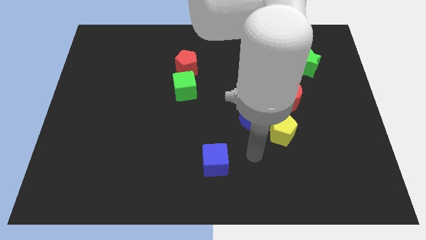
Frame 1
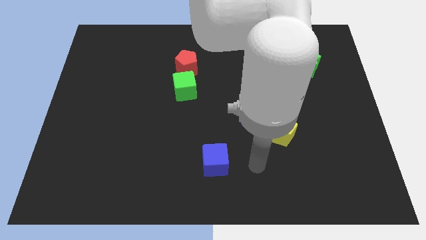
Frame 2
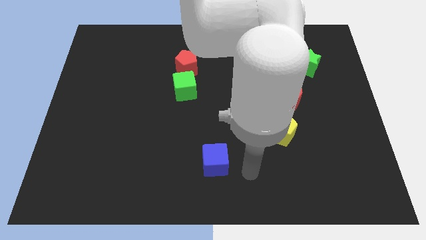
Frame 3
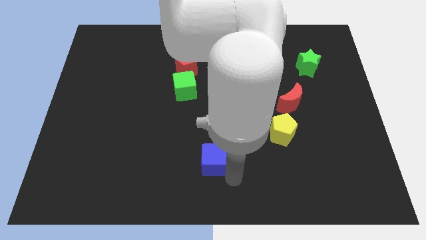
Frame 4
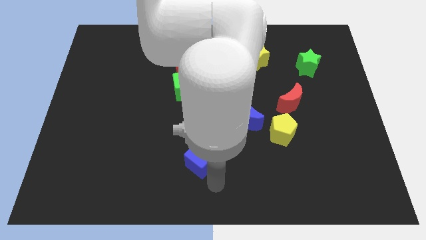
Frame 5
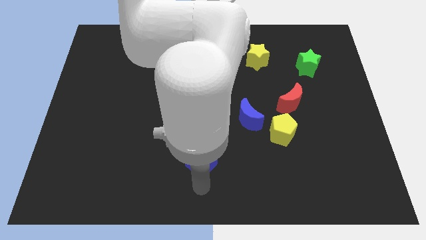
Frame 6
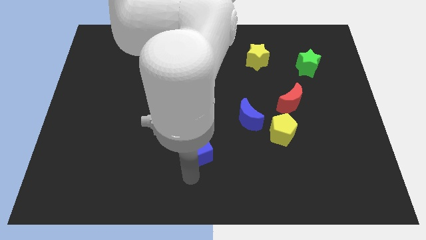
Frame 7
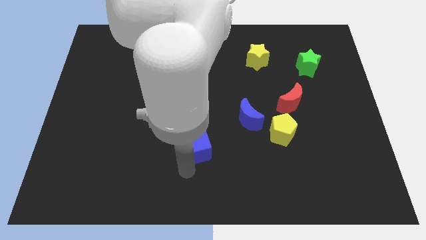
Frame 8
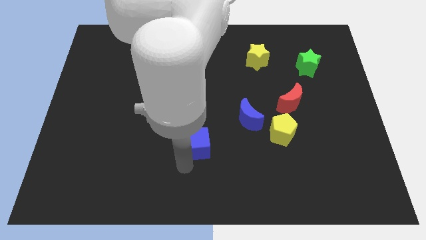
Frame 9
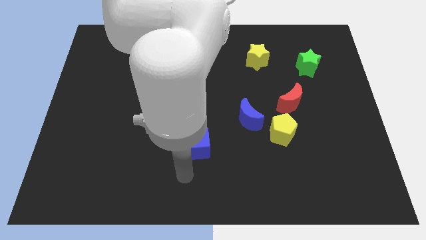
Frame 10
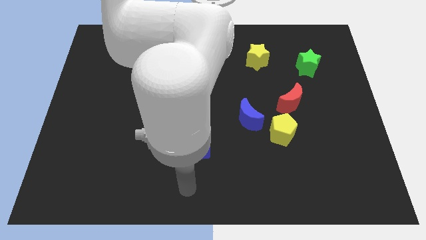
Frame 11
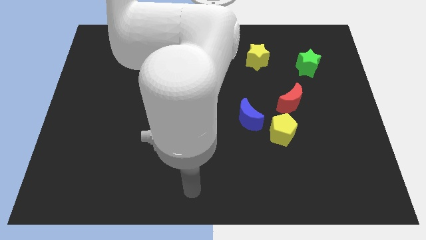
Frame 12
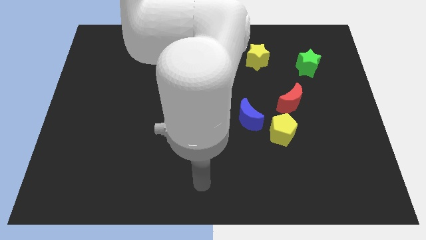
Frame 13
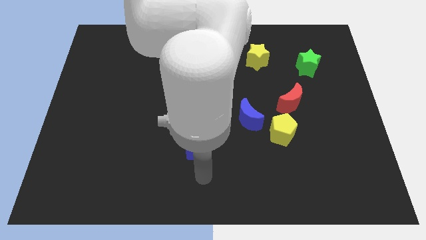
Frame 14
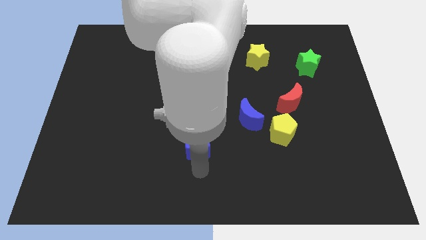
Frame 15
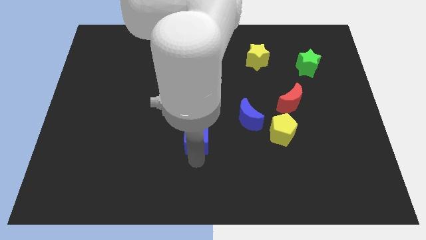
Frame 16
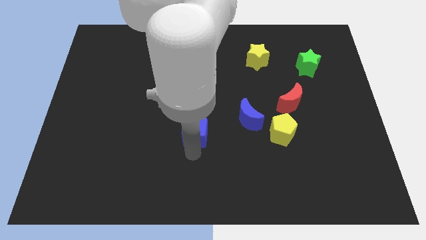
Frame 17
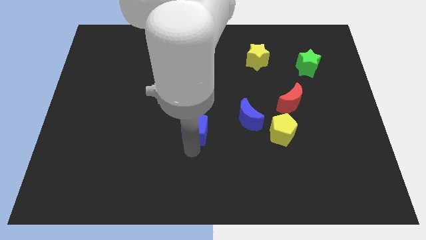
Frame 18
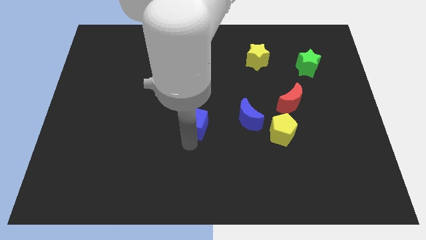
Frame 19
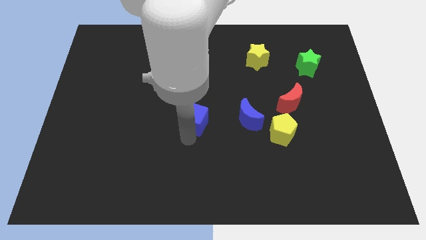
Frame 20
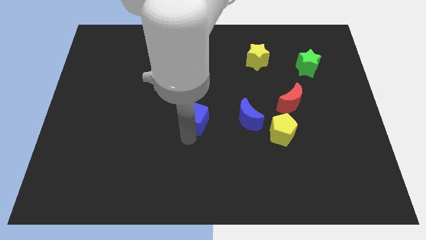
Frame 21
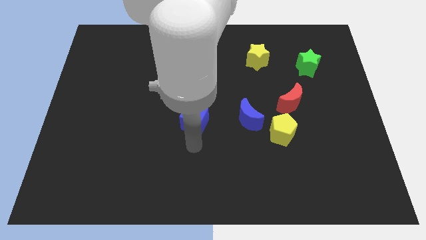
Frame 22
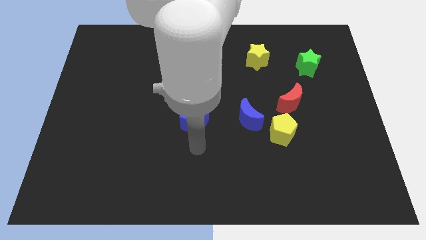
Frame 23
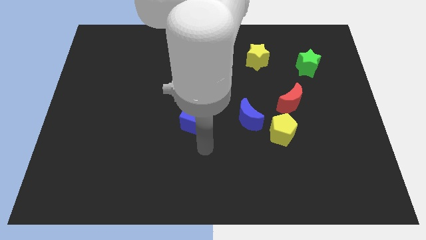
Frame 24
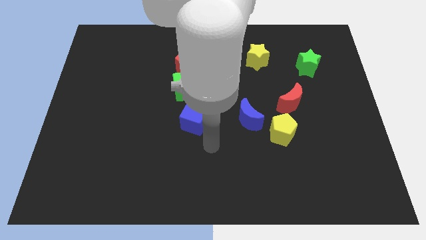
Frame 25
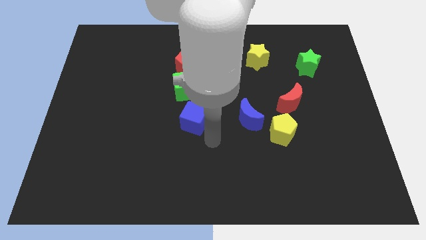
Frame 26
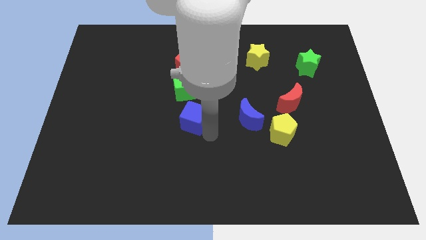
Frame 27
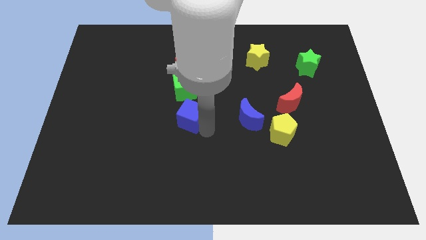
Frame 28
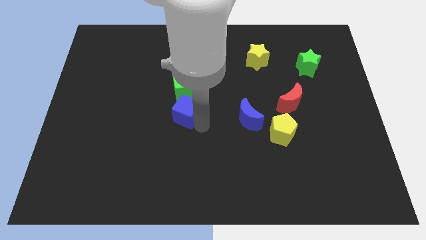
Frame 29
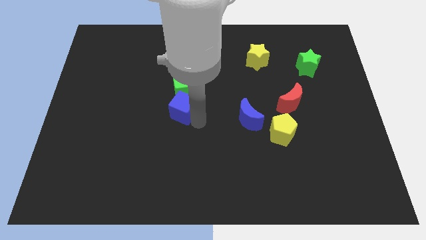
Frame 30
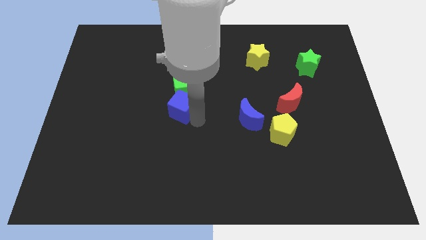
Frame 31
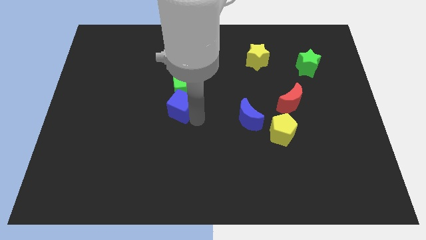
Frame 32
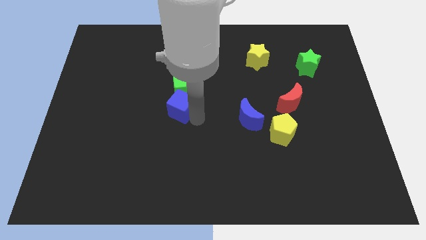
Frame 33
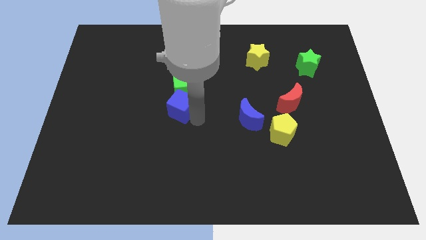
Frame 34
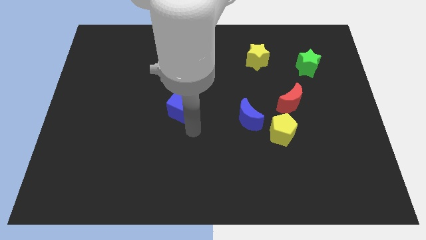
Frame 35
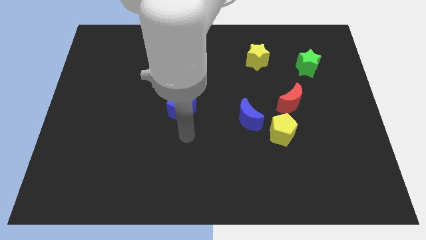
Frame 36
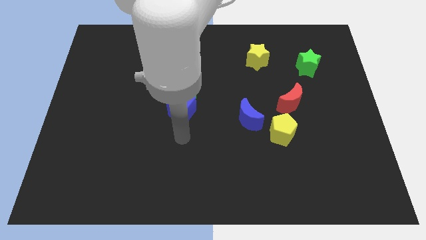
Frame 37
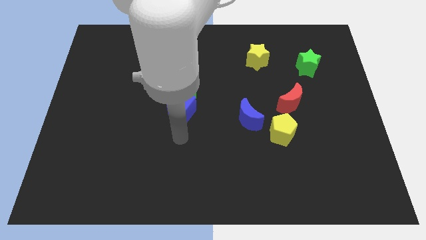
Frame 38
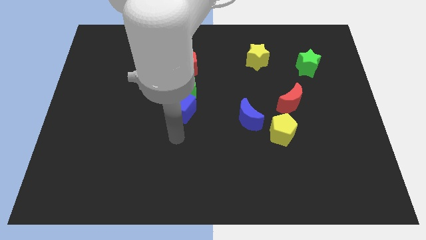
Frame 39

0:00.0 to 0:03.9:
move blue cube into green cube

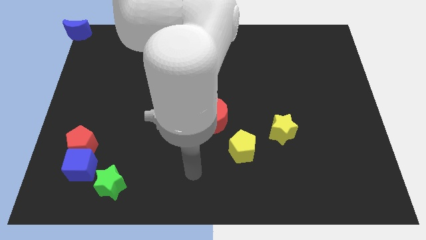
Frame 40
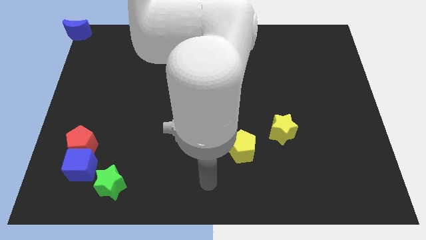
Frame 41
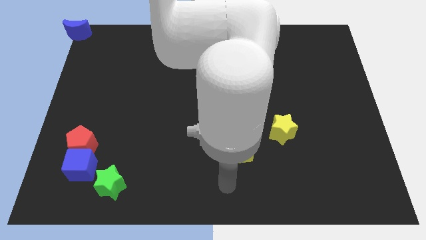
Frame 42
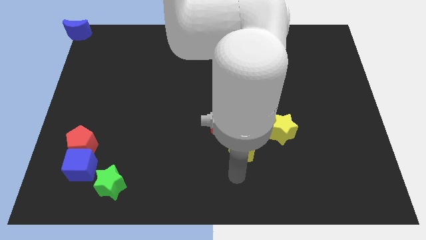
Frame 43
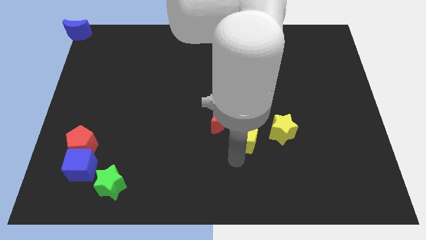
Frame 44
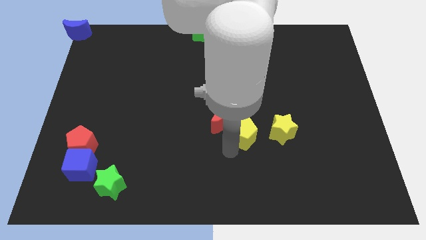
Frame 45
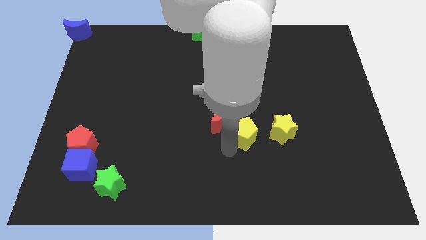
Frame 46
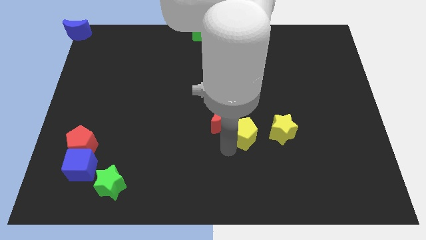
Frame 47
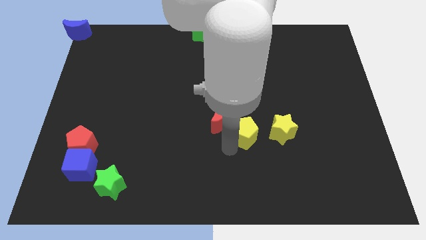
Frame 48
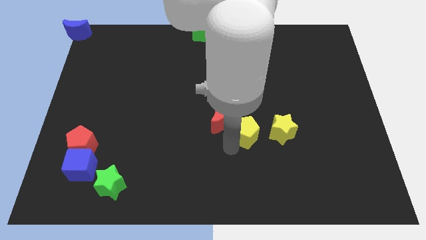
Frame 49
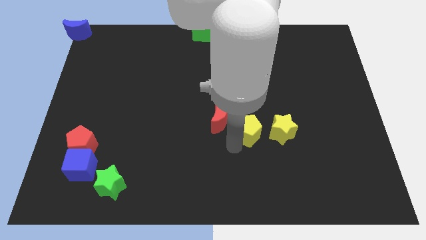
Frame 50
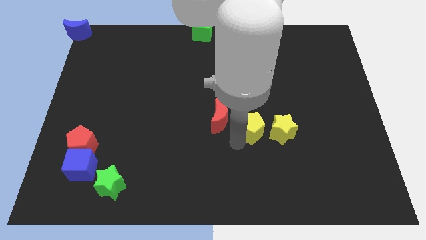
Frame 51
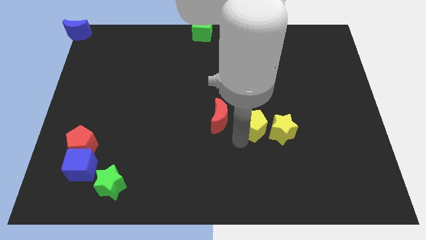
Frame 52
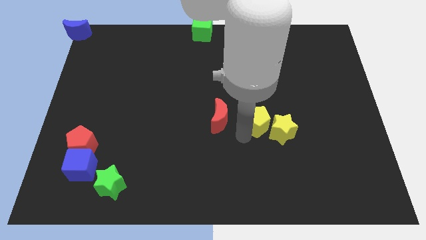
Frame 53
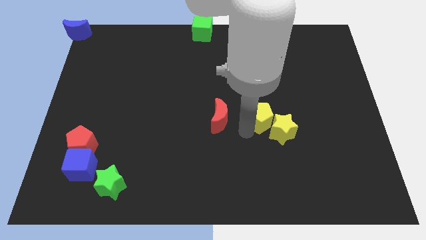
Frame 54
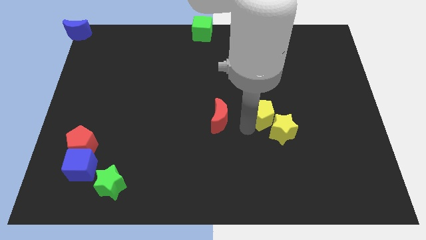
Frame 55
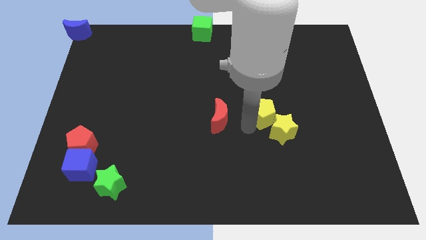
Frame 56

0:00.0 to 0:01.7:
push the yellow pentagon diagonal to the right of the red crescent

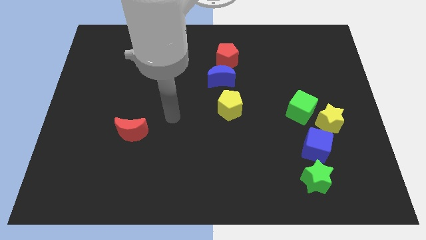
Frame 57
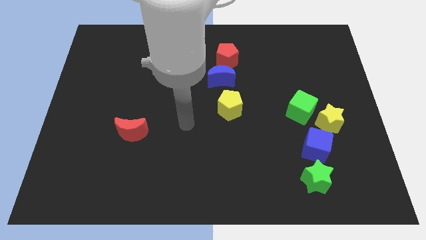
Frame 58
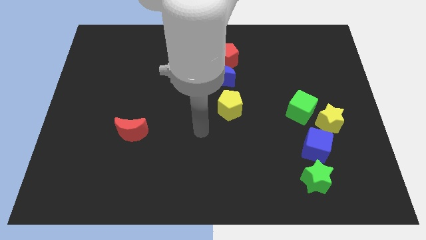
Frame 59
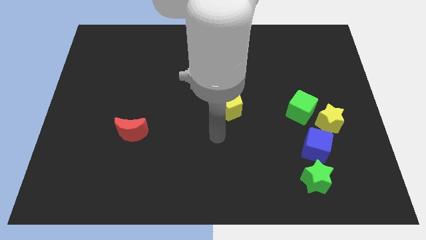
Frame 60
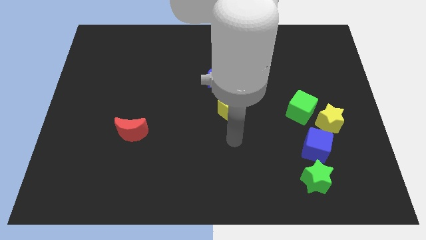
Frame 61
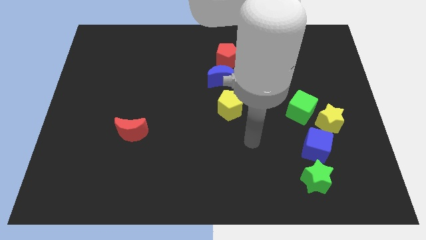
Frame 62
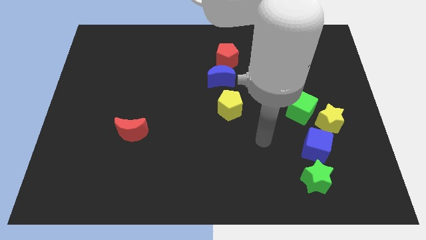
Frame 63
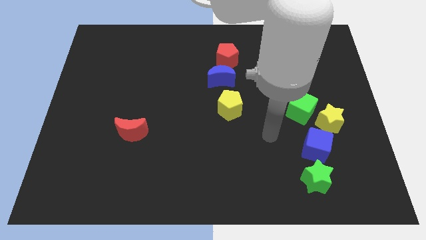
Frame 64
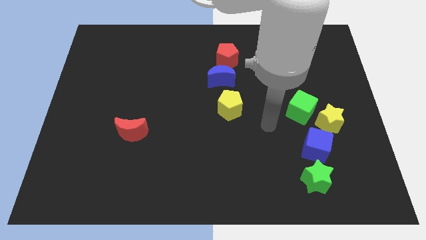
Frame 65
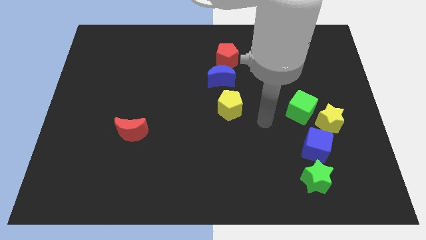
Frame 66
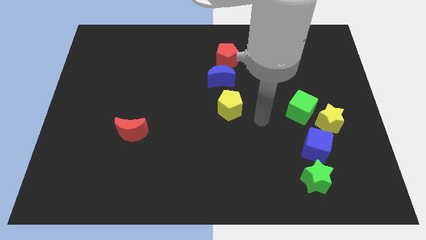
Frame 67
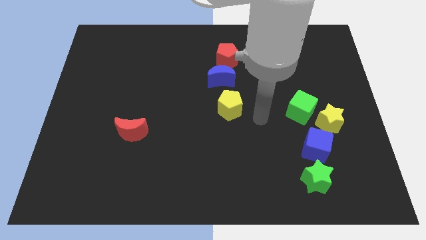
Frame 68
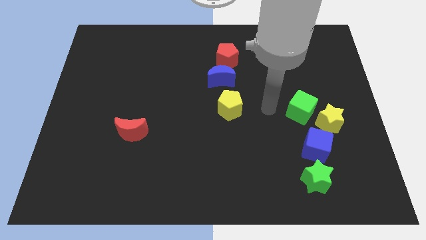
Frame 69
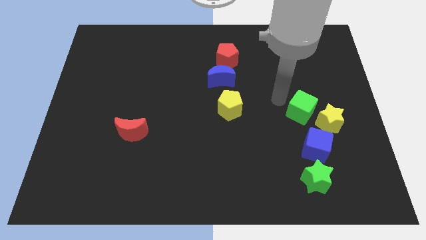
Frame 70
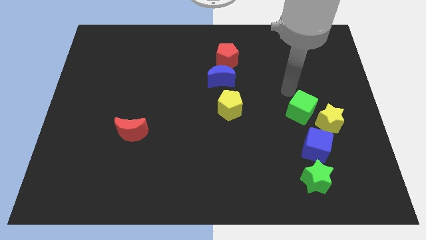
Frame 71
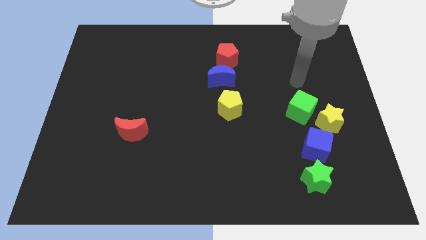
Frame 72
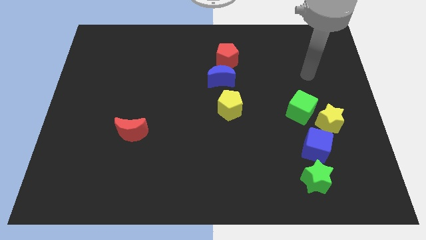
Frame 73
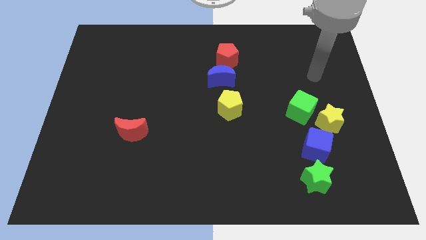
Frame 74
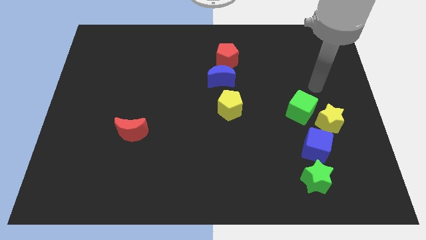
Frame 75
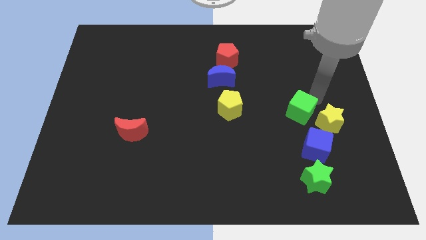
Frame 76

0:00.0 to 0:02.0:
place your arm near the green cube

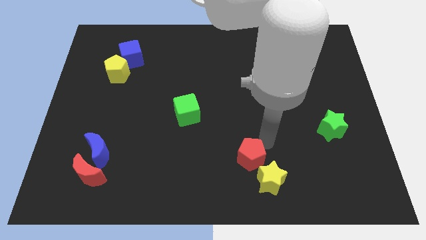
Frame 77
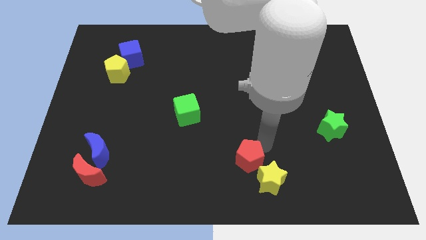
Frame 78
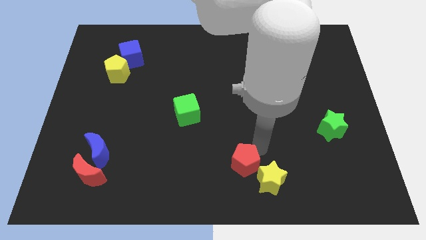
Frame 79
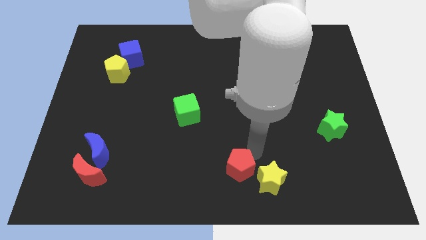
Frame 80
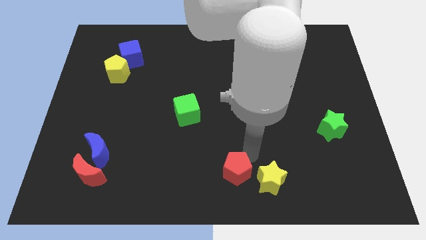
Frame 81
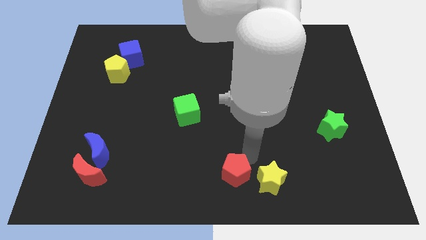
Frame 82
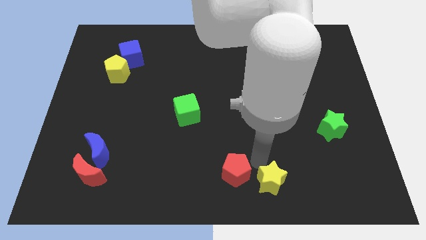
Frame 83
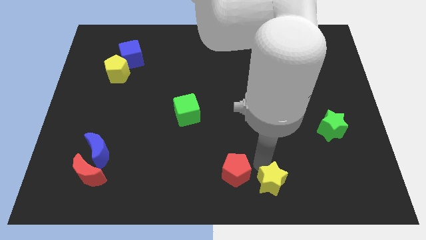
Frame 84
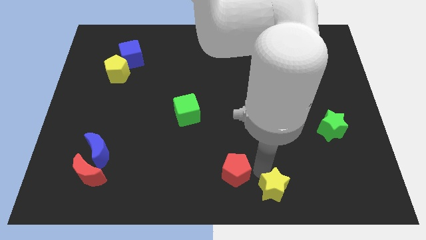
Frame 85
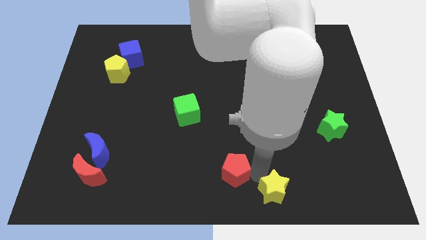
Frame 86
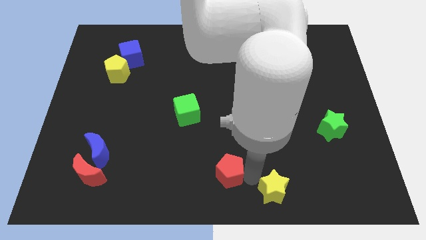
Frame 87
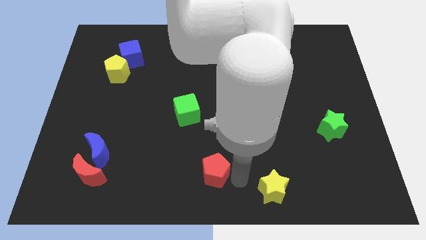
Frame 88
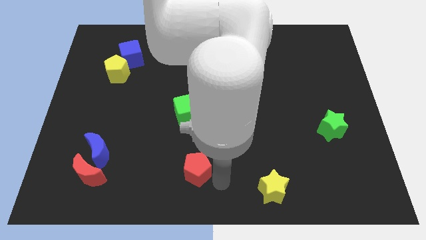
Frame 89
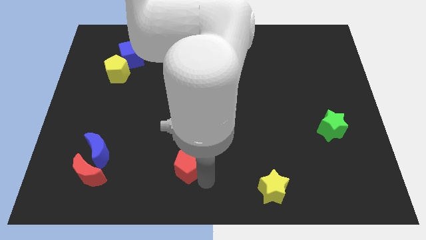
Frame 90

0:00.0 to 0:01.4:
put the red pentagon parallel to the right of the red crescent
